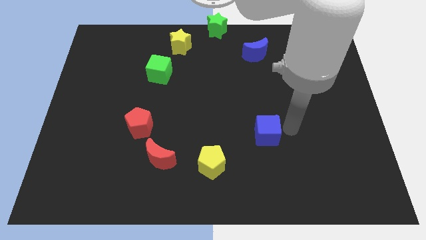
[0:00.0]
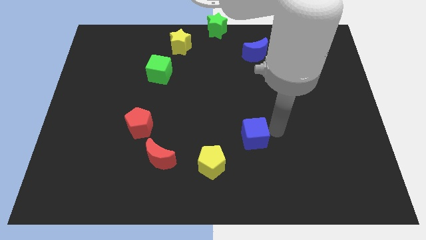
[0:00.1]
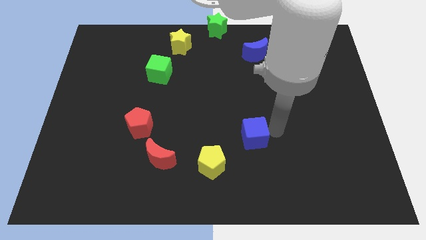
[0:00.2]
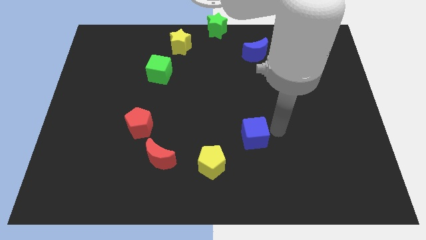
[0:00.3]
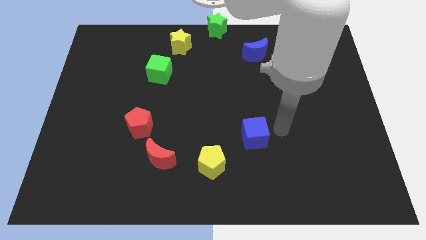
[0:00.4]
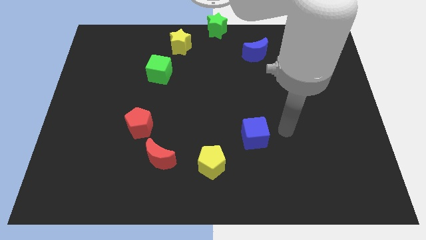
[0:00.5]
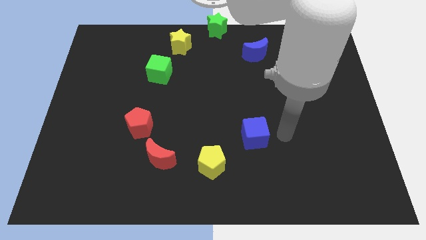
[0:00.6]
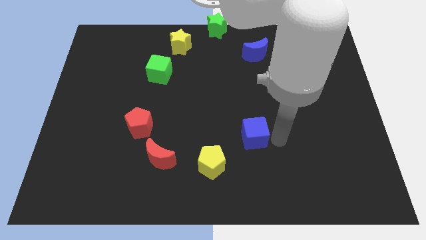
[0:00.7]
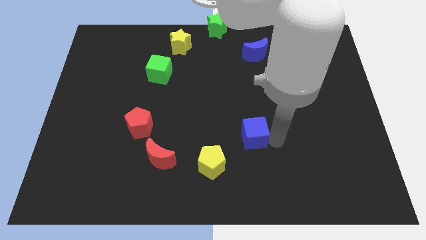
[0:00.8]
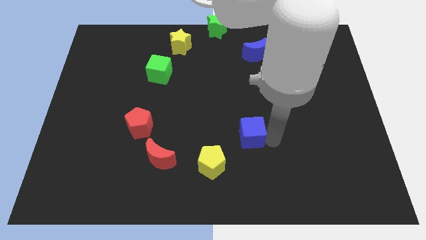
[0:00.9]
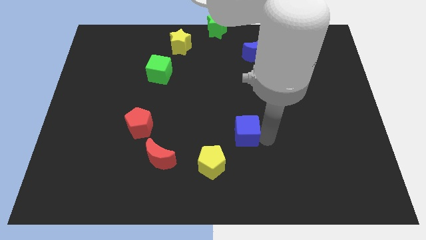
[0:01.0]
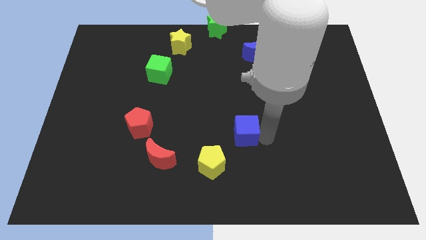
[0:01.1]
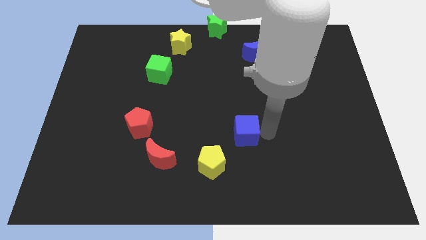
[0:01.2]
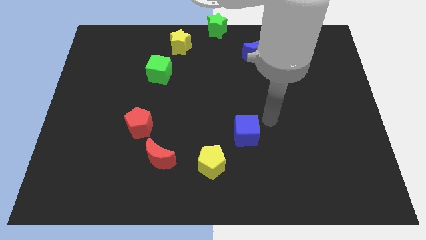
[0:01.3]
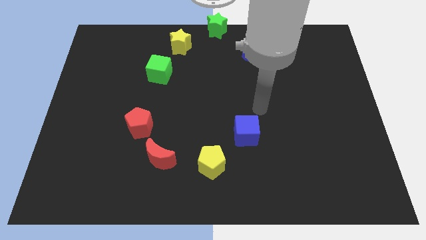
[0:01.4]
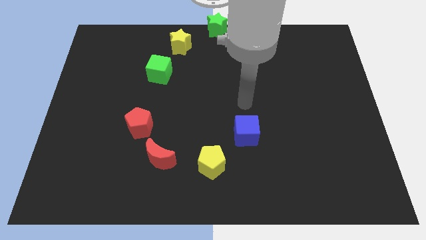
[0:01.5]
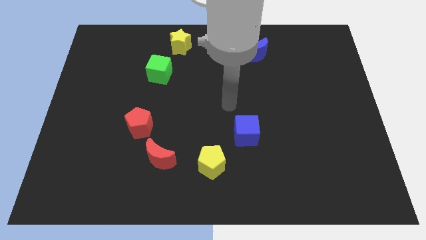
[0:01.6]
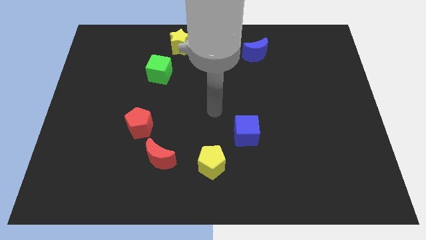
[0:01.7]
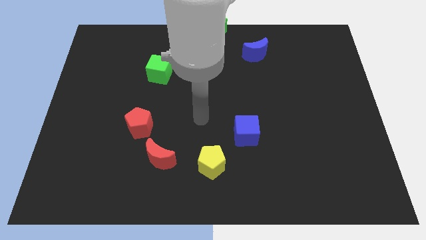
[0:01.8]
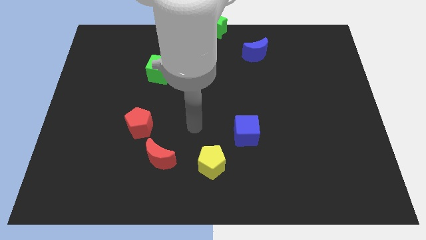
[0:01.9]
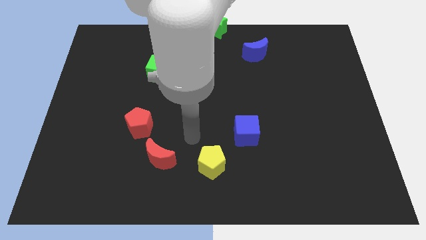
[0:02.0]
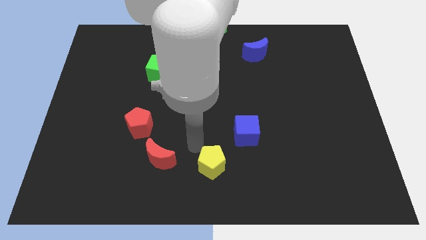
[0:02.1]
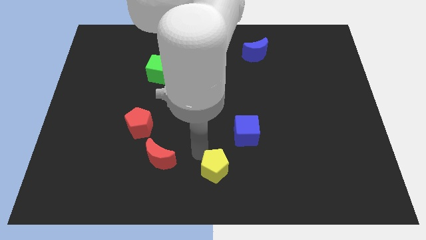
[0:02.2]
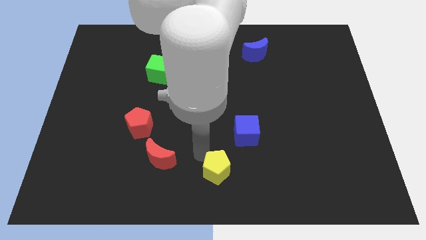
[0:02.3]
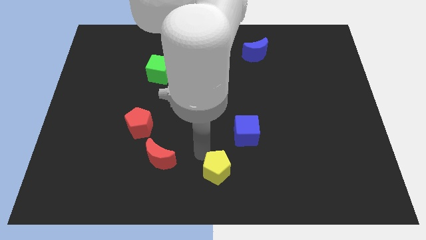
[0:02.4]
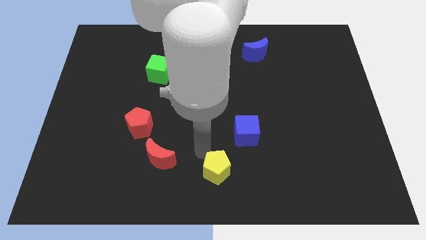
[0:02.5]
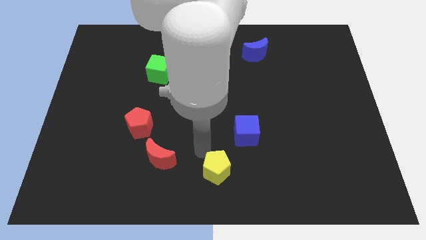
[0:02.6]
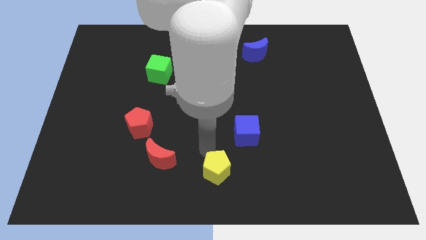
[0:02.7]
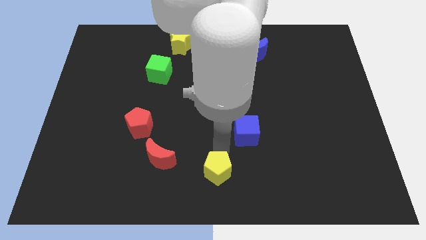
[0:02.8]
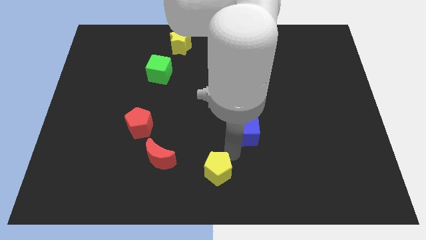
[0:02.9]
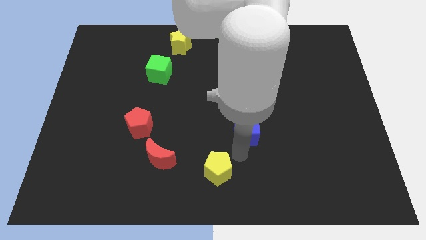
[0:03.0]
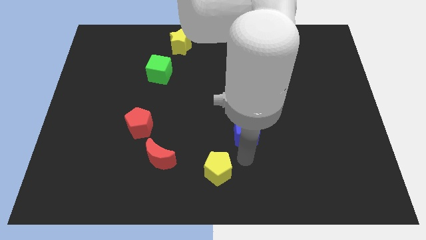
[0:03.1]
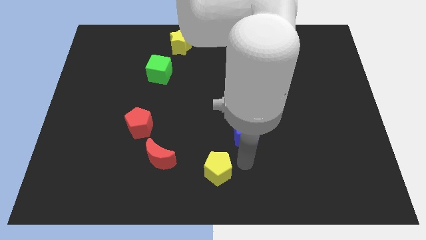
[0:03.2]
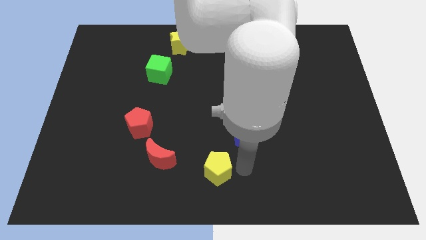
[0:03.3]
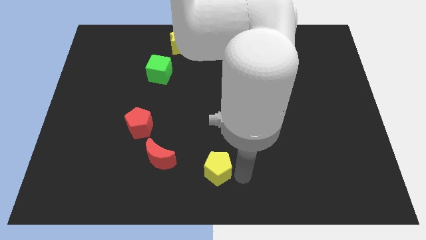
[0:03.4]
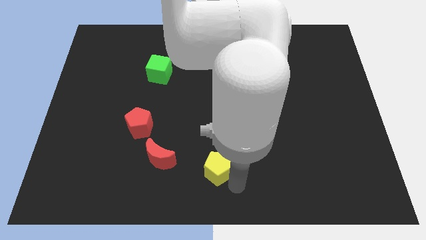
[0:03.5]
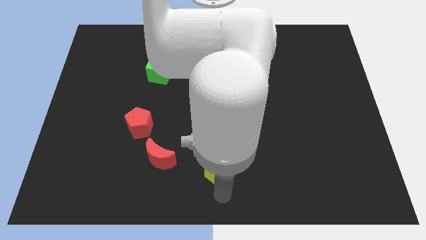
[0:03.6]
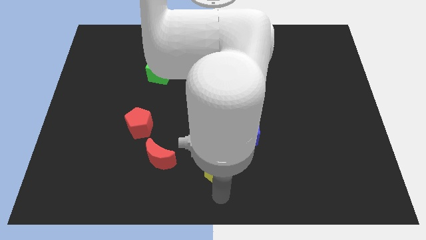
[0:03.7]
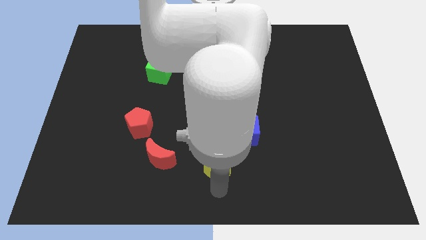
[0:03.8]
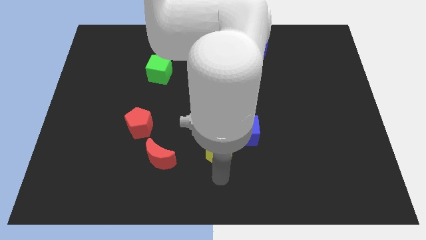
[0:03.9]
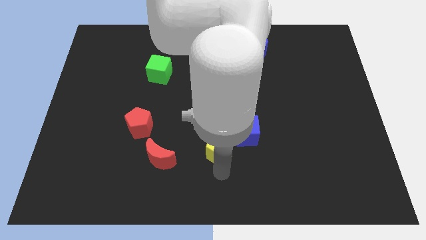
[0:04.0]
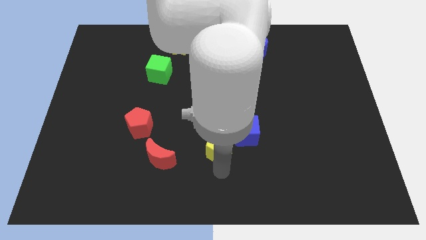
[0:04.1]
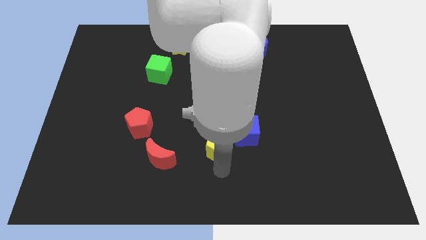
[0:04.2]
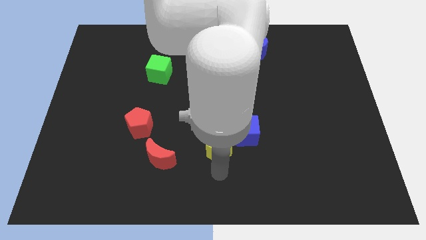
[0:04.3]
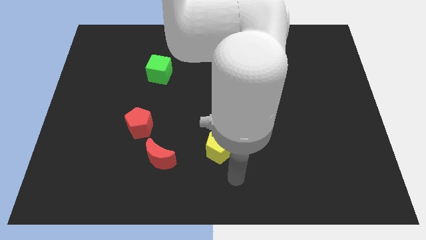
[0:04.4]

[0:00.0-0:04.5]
move the yellow pentago close to blue cube

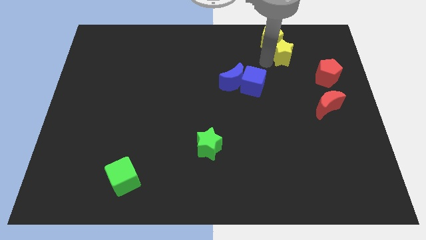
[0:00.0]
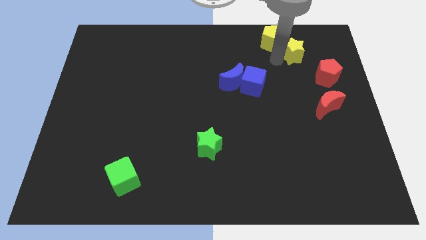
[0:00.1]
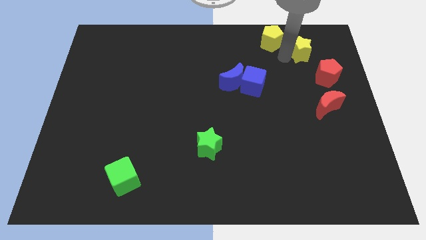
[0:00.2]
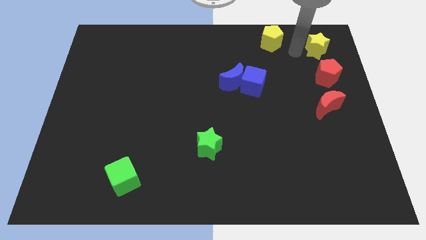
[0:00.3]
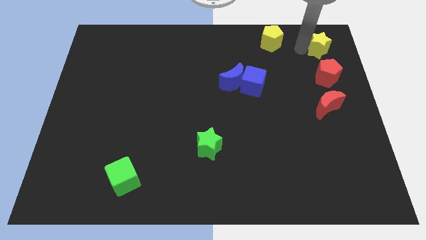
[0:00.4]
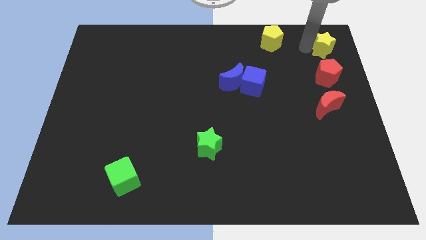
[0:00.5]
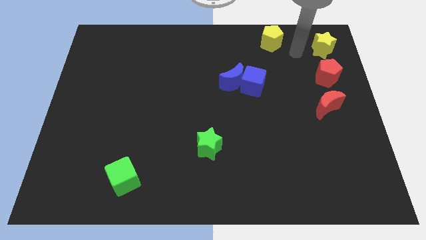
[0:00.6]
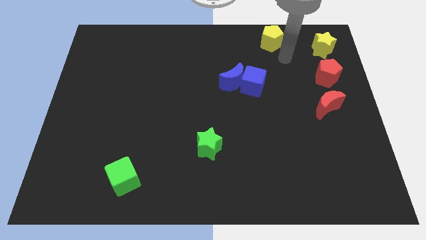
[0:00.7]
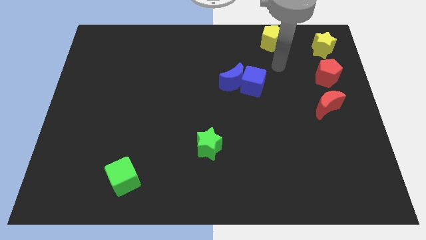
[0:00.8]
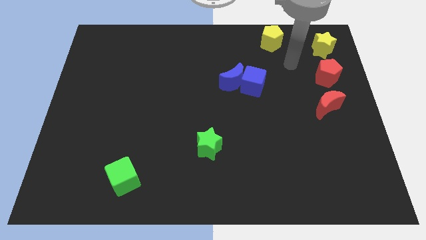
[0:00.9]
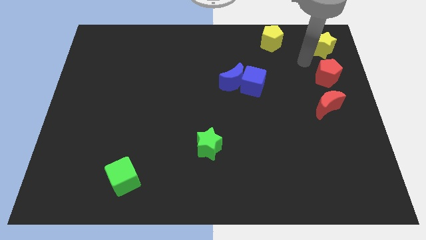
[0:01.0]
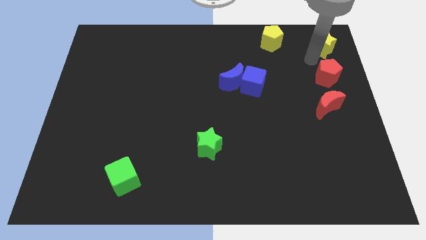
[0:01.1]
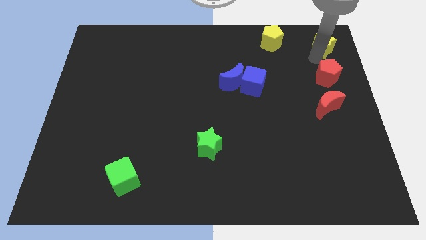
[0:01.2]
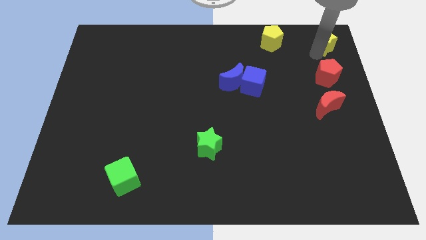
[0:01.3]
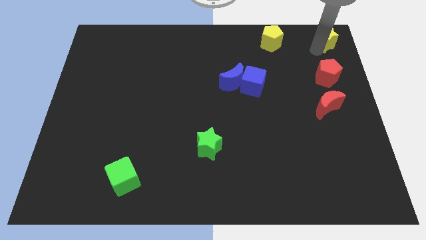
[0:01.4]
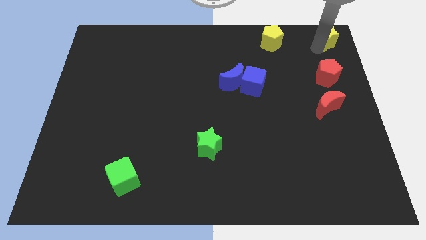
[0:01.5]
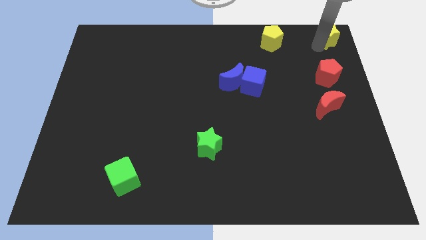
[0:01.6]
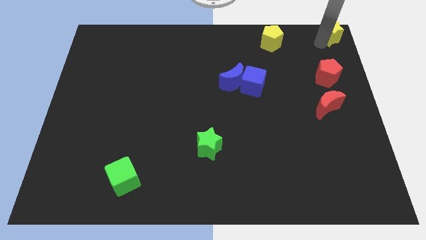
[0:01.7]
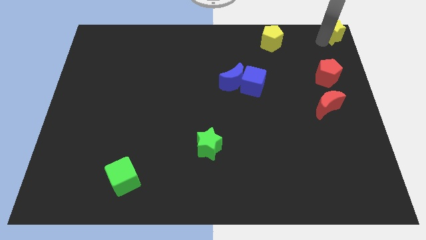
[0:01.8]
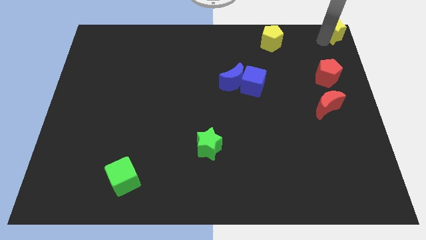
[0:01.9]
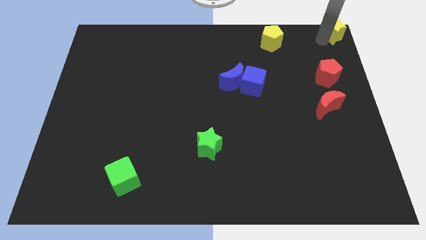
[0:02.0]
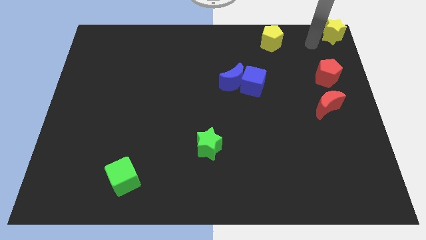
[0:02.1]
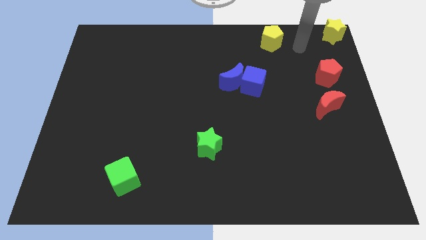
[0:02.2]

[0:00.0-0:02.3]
push the yellow star at the top right corner

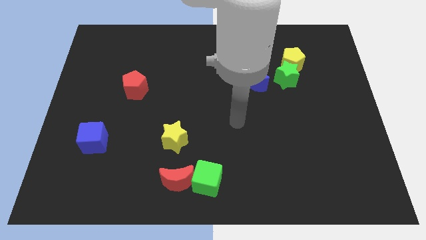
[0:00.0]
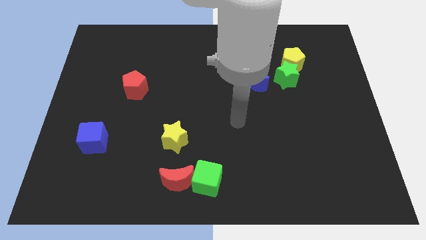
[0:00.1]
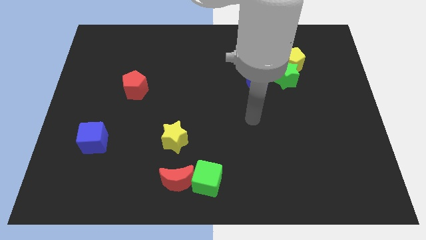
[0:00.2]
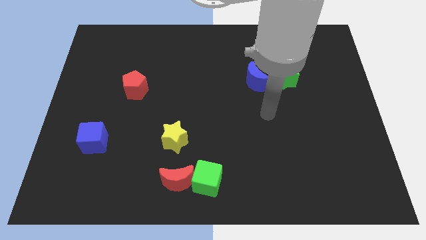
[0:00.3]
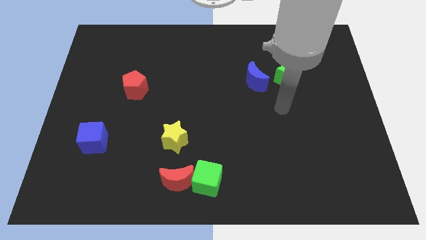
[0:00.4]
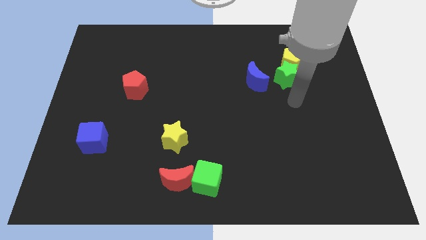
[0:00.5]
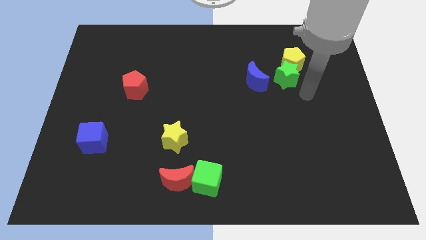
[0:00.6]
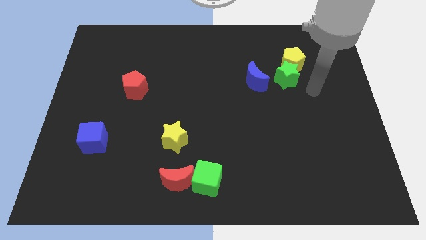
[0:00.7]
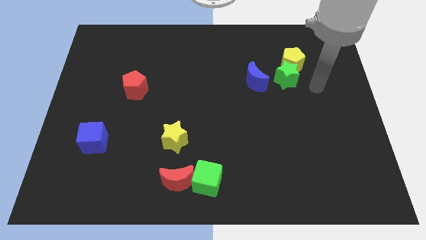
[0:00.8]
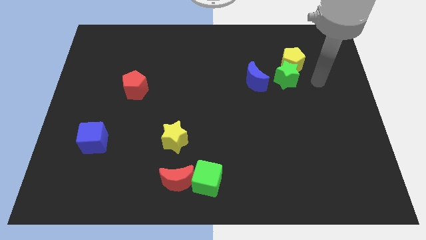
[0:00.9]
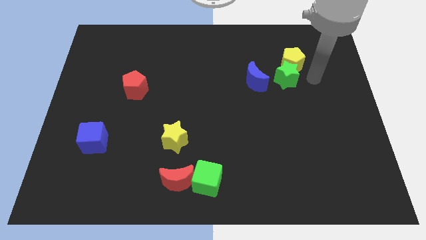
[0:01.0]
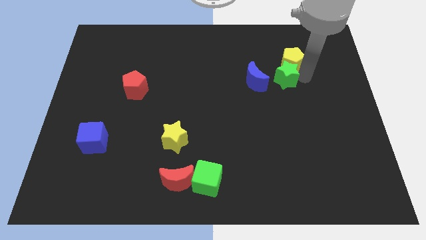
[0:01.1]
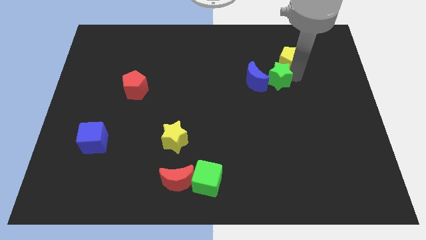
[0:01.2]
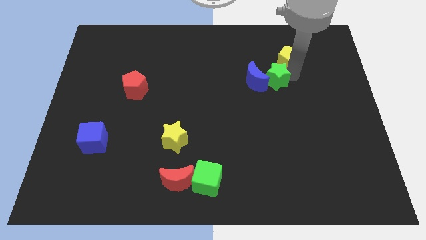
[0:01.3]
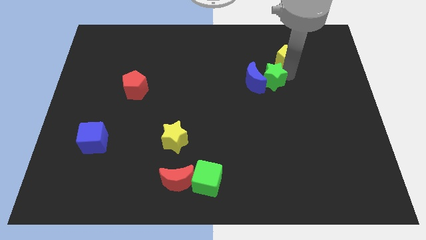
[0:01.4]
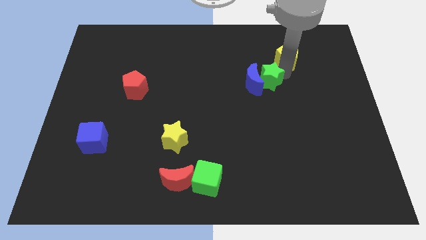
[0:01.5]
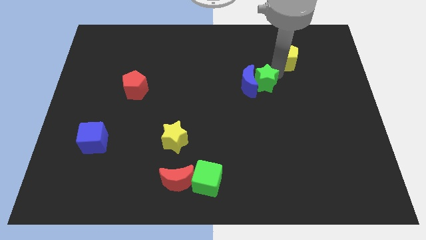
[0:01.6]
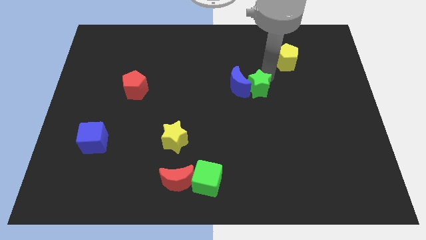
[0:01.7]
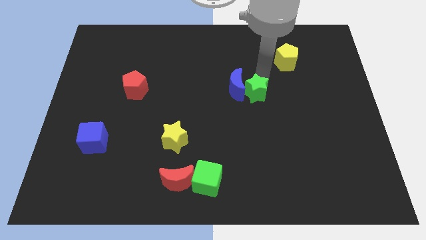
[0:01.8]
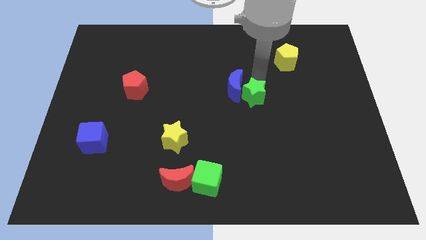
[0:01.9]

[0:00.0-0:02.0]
separate the green star from the yellow pentagon
